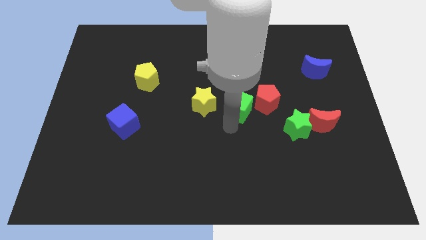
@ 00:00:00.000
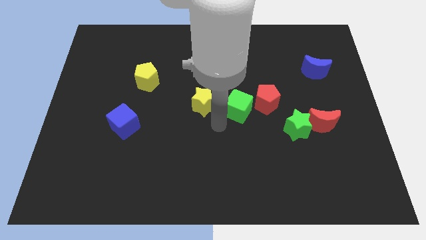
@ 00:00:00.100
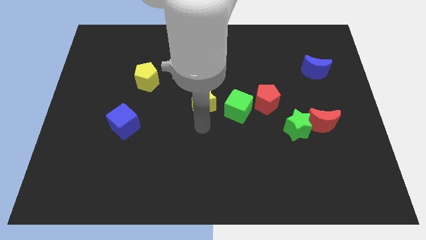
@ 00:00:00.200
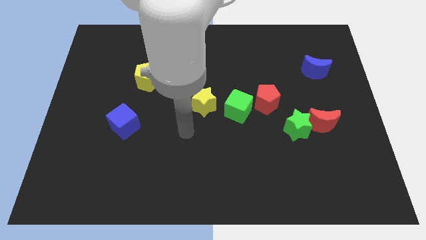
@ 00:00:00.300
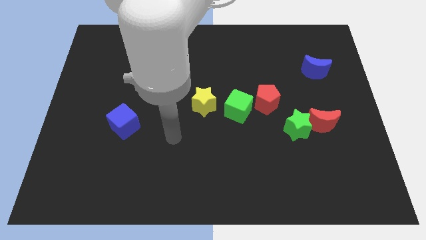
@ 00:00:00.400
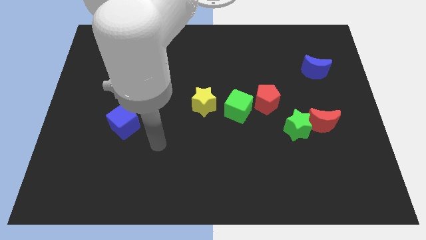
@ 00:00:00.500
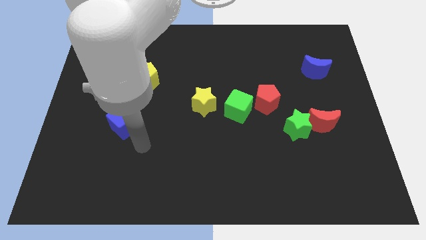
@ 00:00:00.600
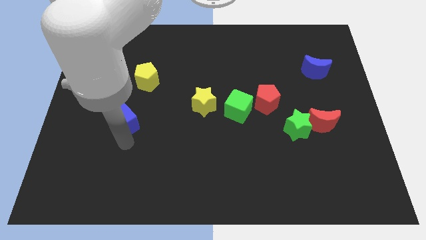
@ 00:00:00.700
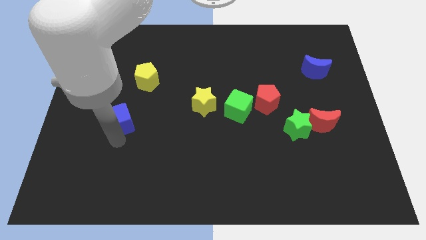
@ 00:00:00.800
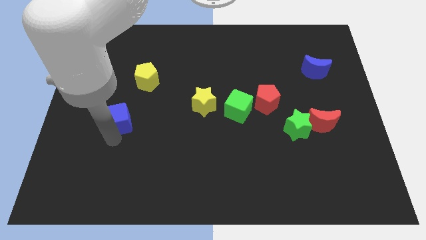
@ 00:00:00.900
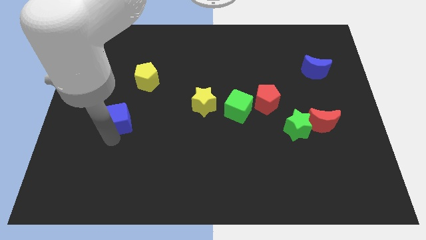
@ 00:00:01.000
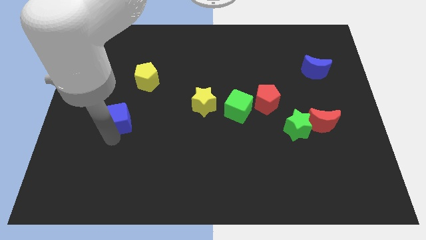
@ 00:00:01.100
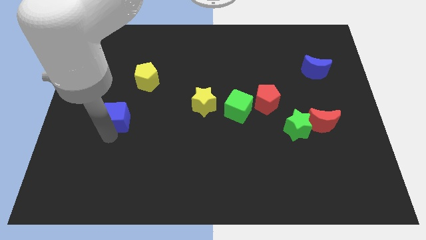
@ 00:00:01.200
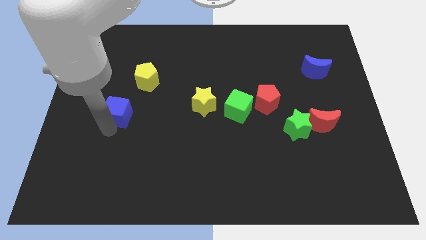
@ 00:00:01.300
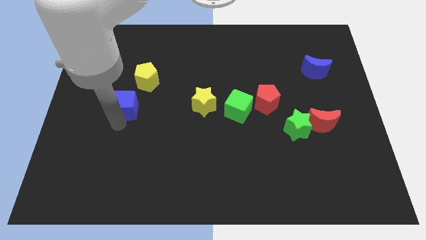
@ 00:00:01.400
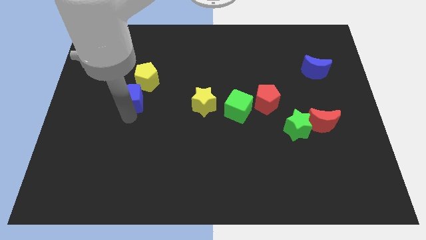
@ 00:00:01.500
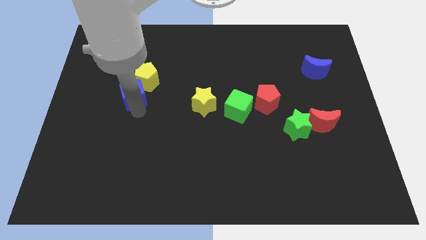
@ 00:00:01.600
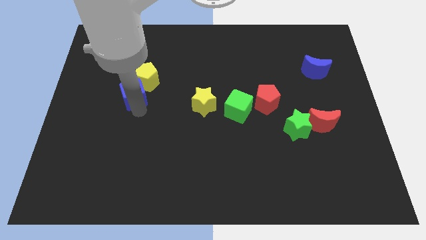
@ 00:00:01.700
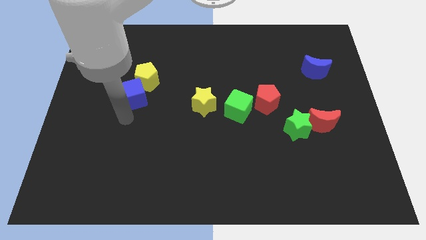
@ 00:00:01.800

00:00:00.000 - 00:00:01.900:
move the blue cube into the yellow pentagon

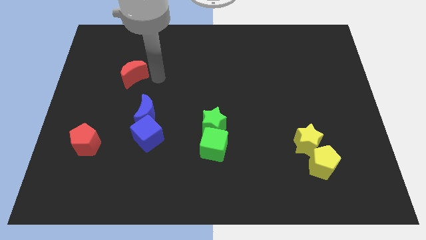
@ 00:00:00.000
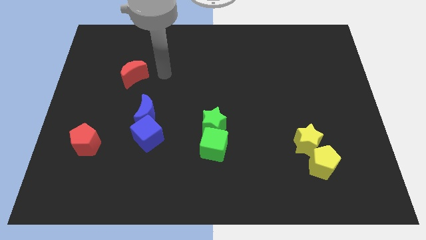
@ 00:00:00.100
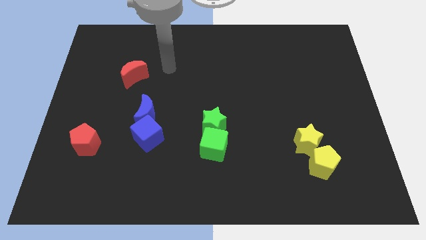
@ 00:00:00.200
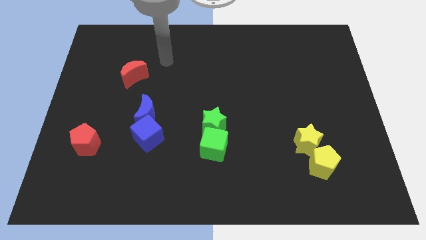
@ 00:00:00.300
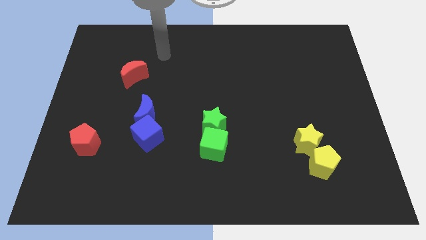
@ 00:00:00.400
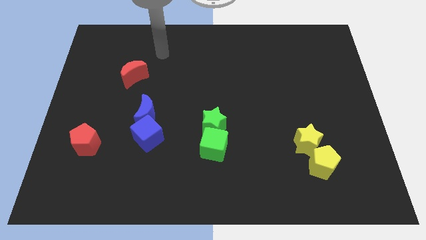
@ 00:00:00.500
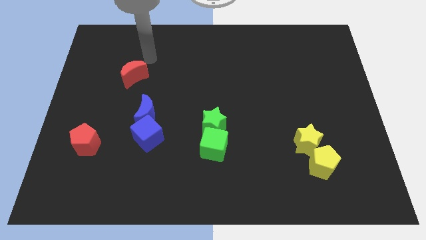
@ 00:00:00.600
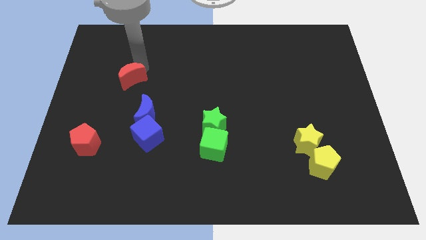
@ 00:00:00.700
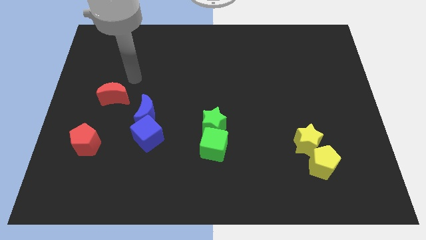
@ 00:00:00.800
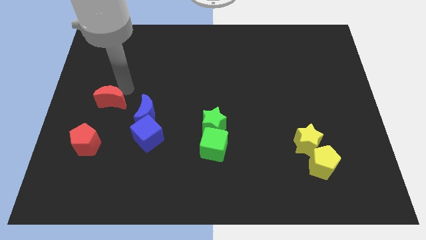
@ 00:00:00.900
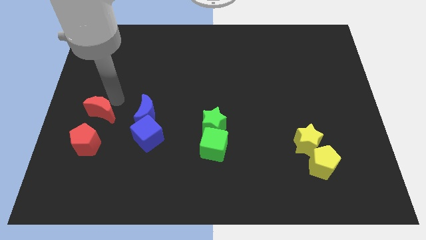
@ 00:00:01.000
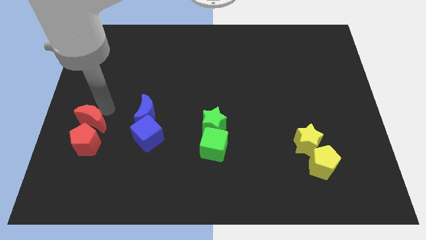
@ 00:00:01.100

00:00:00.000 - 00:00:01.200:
push the red moon to the top of the red pentagon

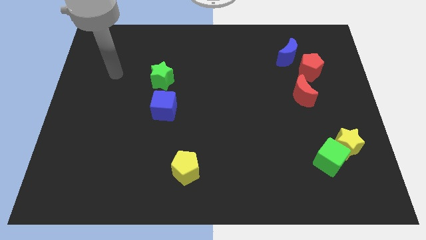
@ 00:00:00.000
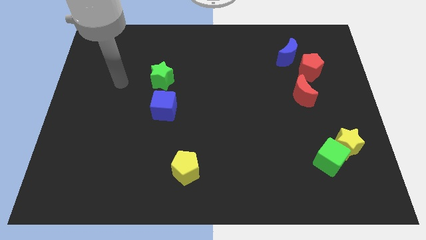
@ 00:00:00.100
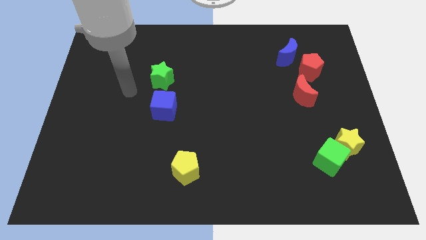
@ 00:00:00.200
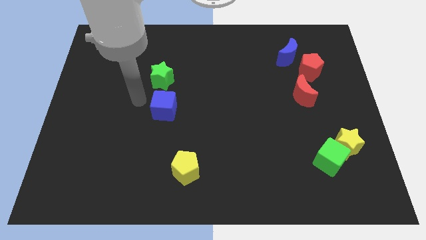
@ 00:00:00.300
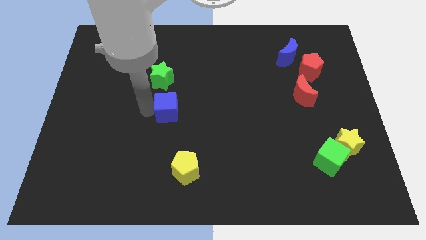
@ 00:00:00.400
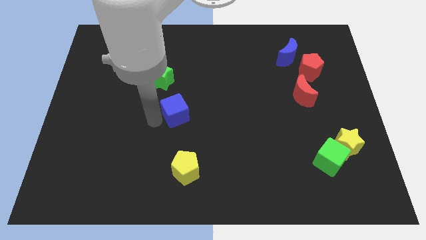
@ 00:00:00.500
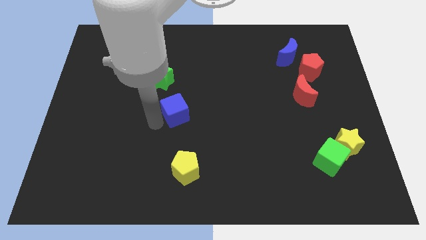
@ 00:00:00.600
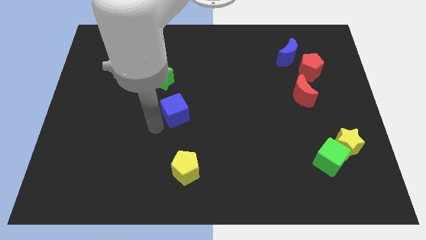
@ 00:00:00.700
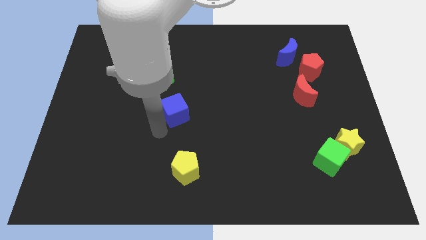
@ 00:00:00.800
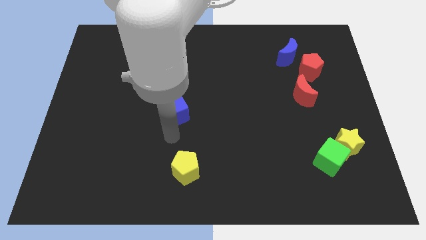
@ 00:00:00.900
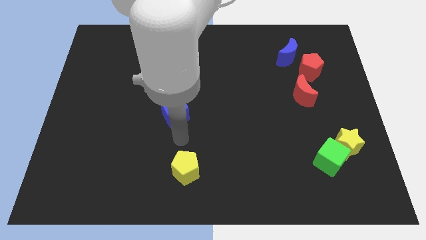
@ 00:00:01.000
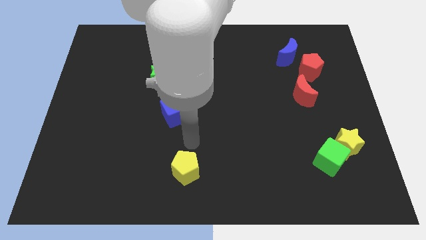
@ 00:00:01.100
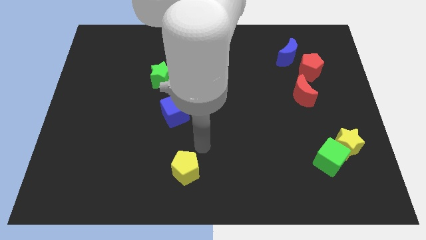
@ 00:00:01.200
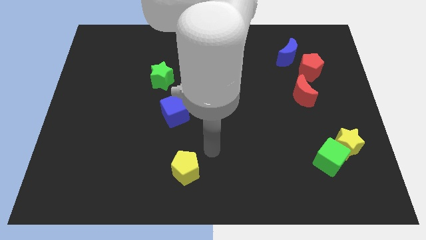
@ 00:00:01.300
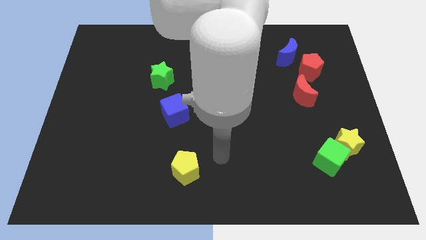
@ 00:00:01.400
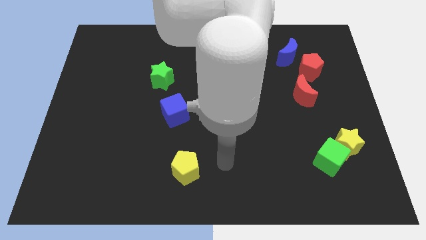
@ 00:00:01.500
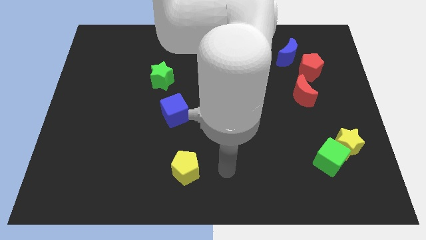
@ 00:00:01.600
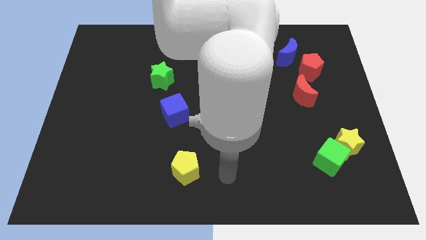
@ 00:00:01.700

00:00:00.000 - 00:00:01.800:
place your arm to the right of yellow pentagon

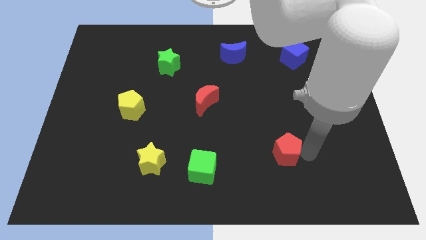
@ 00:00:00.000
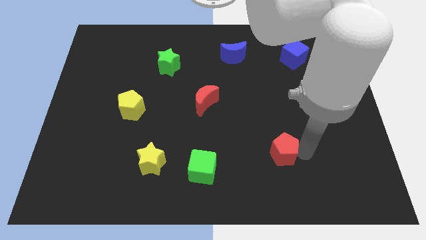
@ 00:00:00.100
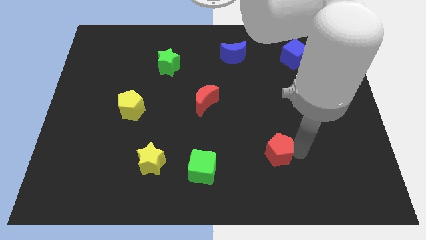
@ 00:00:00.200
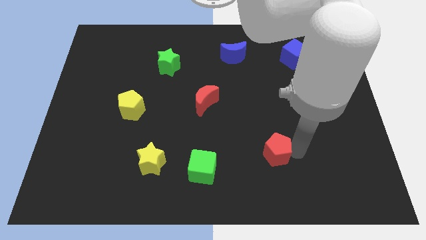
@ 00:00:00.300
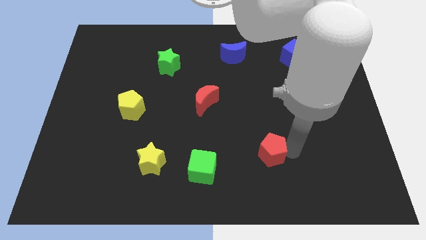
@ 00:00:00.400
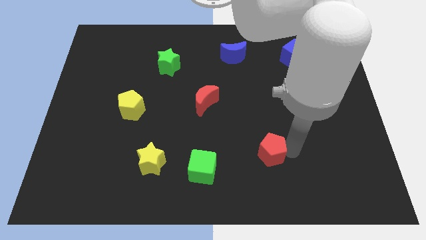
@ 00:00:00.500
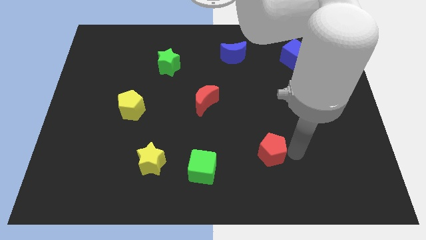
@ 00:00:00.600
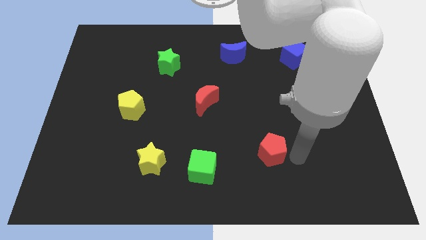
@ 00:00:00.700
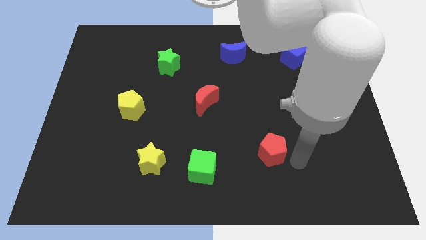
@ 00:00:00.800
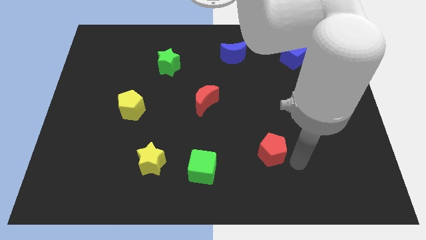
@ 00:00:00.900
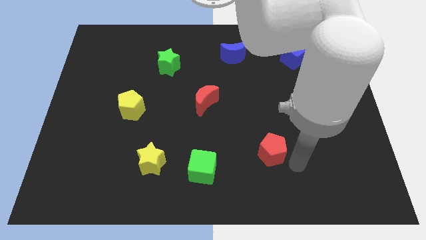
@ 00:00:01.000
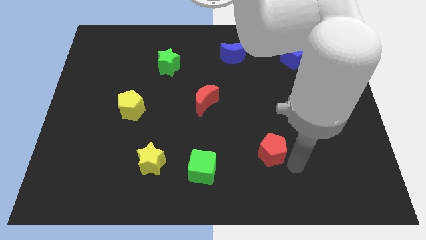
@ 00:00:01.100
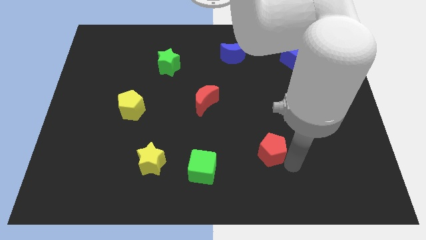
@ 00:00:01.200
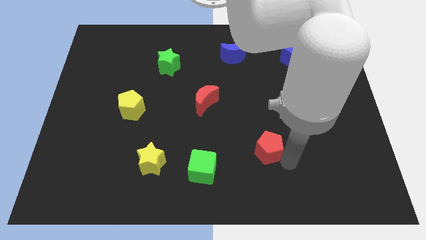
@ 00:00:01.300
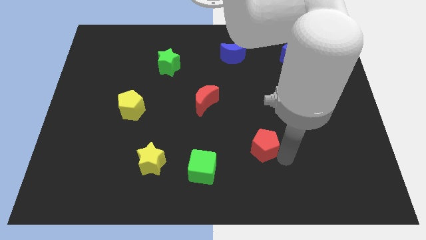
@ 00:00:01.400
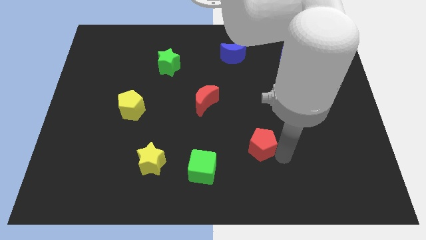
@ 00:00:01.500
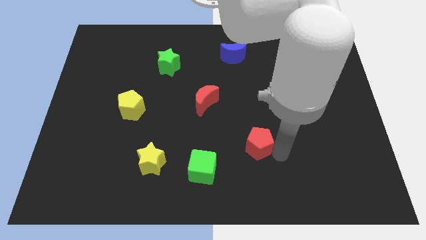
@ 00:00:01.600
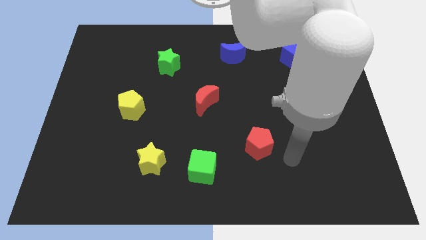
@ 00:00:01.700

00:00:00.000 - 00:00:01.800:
push red pentagon slightly towards left

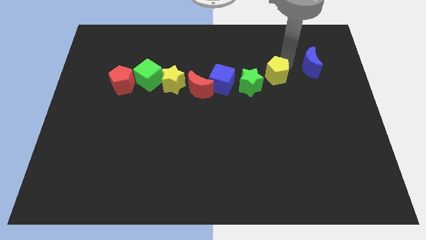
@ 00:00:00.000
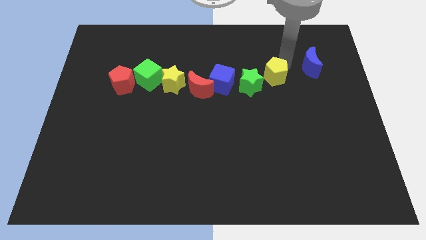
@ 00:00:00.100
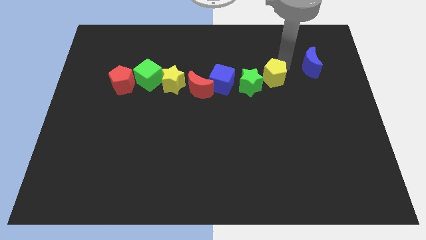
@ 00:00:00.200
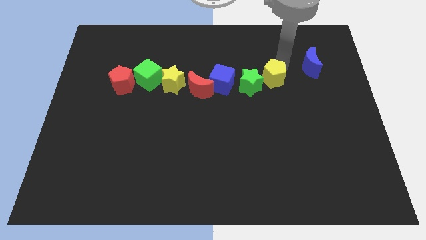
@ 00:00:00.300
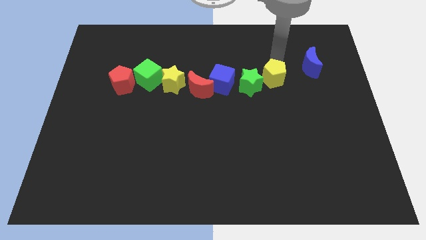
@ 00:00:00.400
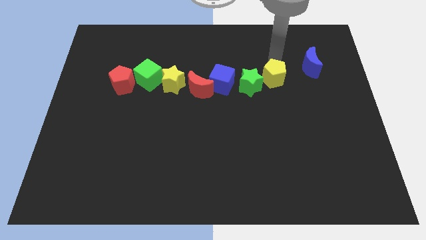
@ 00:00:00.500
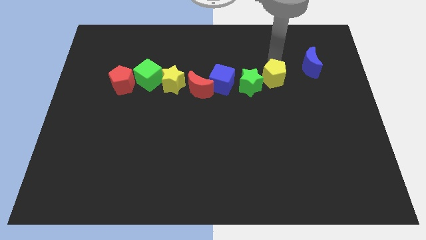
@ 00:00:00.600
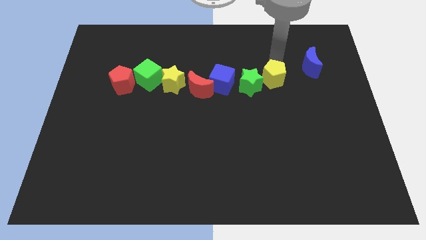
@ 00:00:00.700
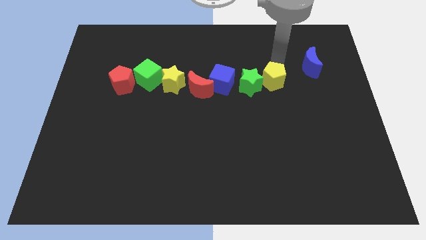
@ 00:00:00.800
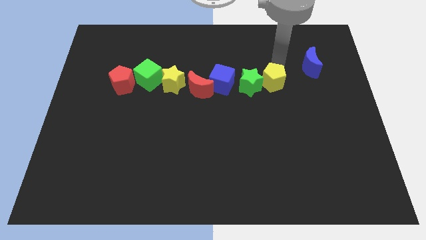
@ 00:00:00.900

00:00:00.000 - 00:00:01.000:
push the yellow pentagon to the right of the green star

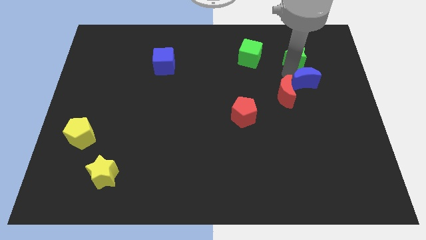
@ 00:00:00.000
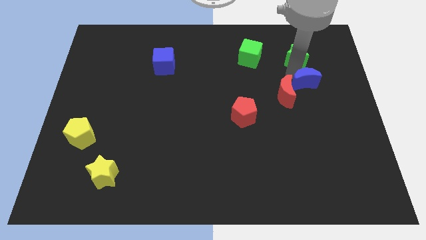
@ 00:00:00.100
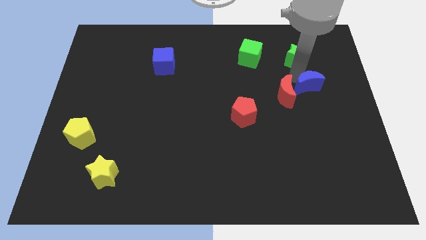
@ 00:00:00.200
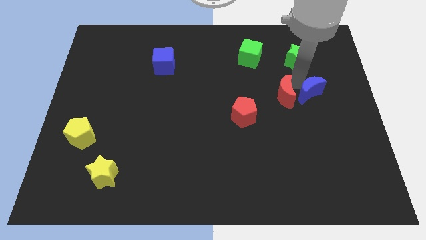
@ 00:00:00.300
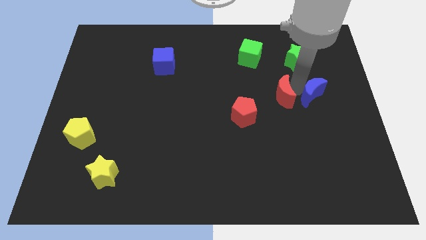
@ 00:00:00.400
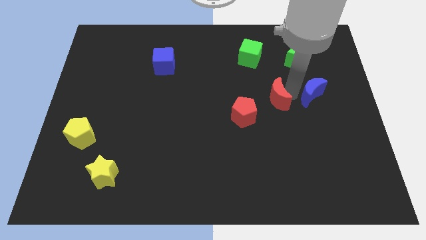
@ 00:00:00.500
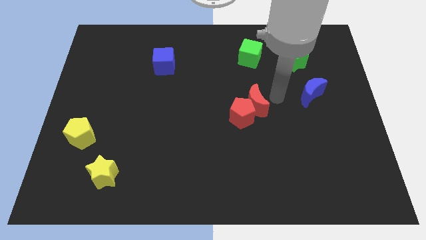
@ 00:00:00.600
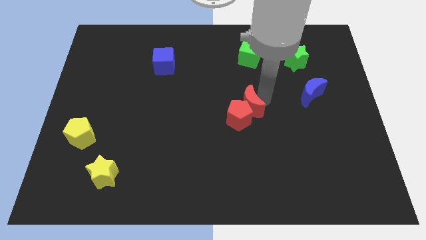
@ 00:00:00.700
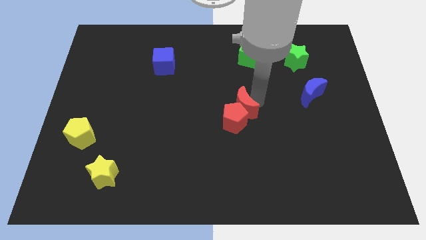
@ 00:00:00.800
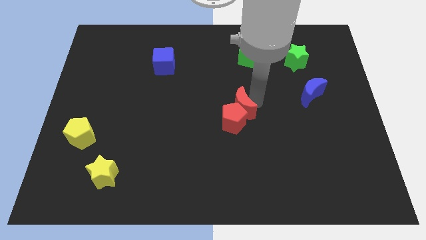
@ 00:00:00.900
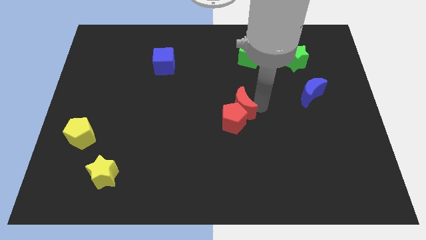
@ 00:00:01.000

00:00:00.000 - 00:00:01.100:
slide red moon into red pentagon
